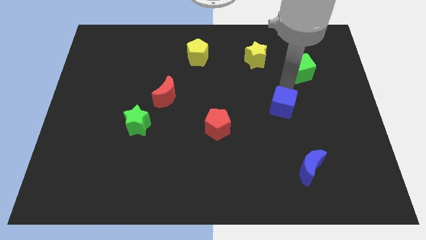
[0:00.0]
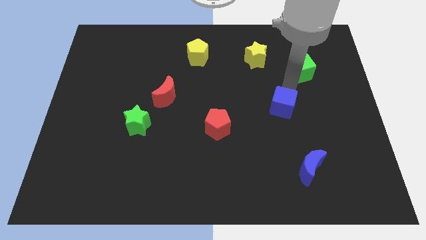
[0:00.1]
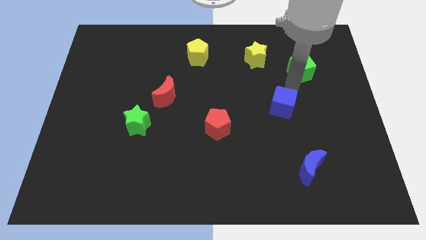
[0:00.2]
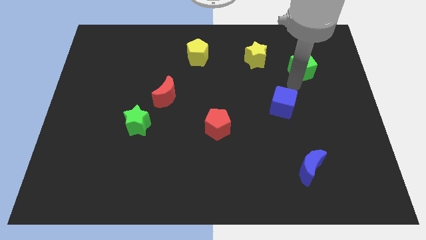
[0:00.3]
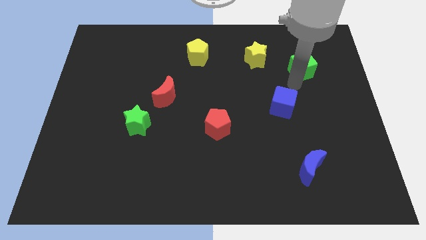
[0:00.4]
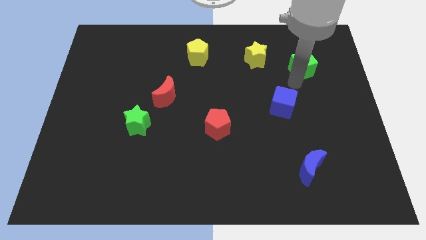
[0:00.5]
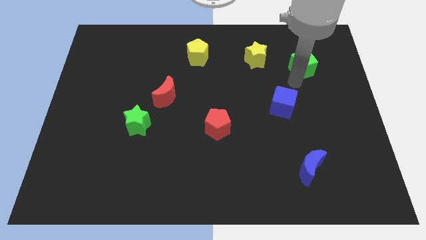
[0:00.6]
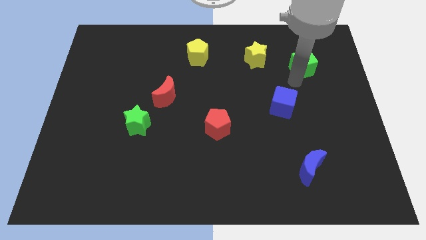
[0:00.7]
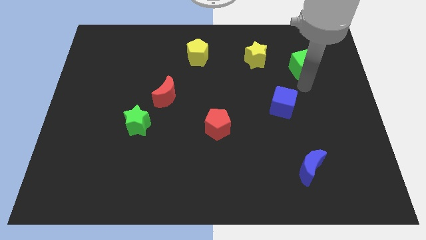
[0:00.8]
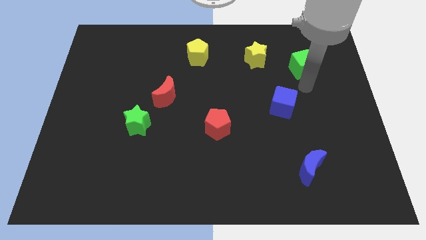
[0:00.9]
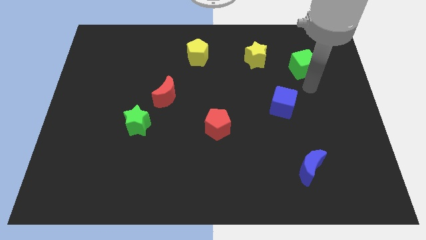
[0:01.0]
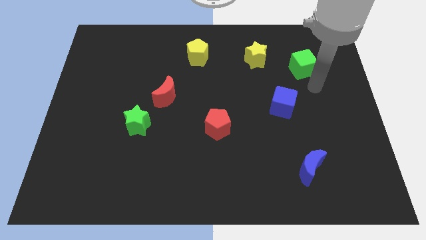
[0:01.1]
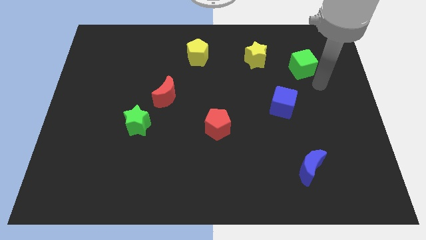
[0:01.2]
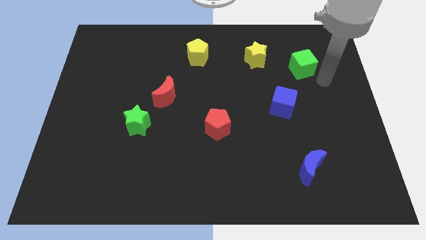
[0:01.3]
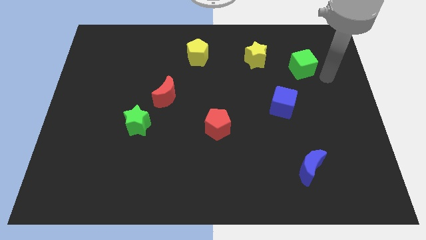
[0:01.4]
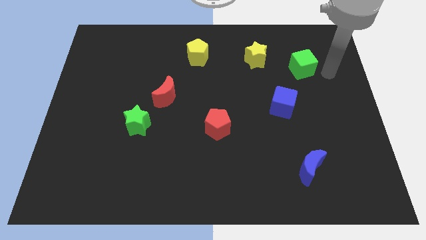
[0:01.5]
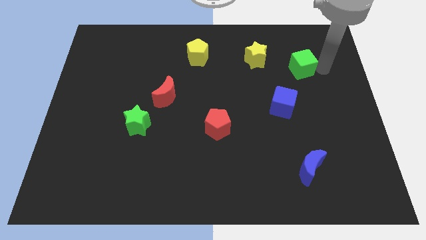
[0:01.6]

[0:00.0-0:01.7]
slightly move green cube upwards

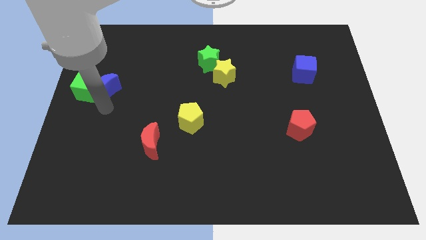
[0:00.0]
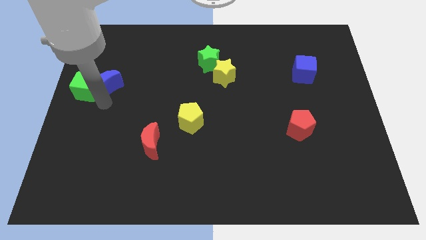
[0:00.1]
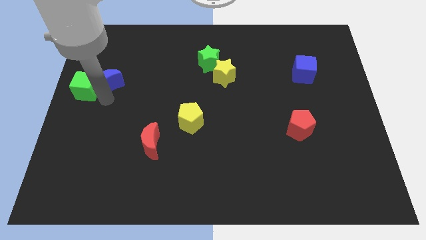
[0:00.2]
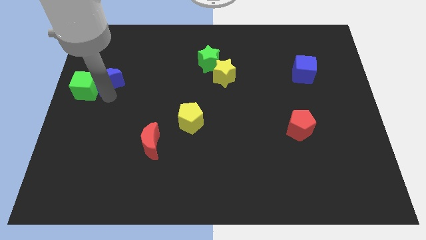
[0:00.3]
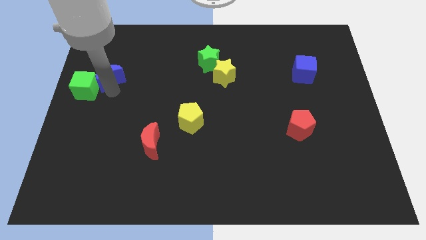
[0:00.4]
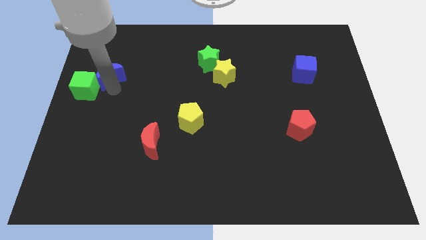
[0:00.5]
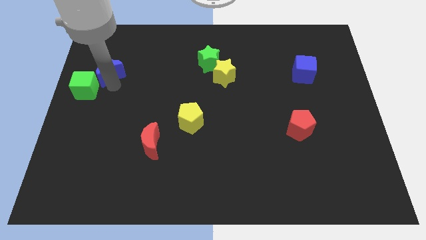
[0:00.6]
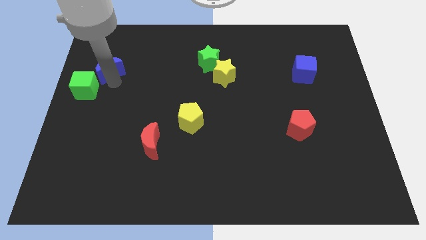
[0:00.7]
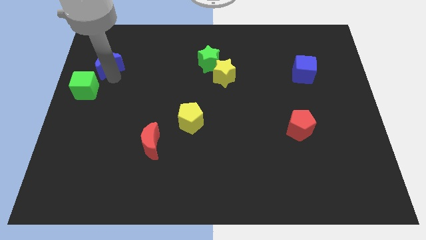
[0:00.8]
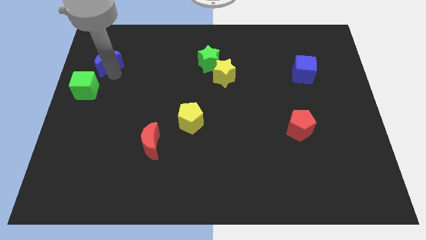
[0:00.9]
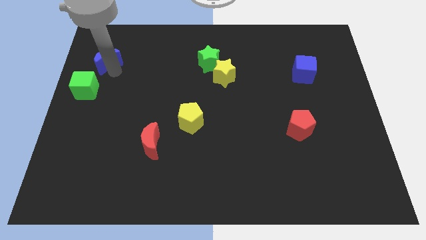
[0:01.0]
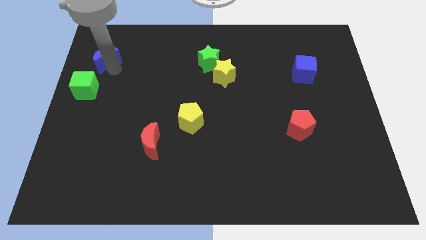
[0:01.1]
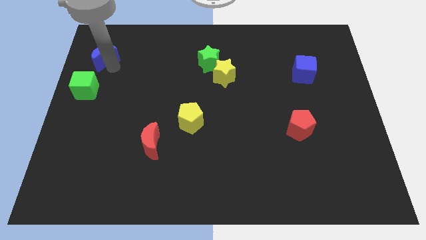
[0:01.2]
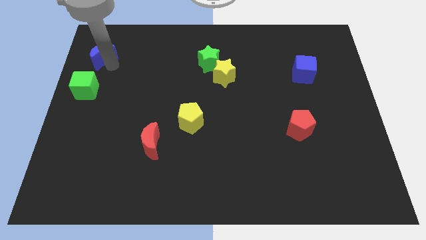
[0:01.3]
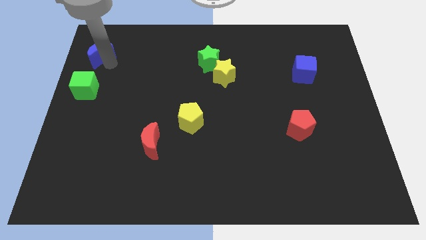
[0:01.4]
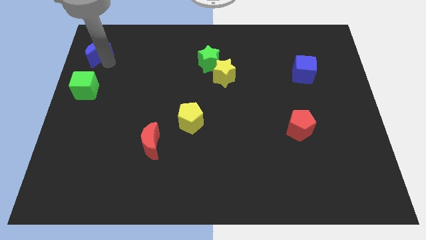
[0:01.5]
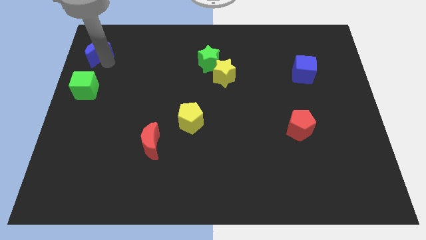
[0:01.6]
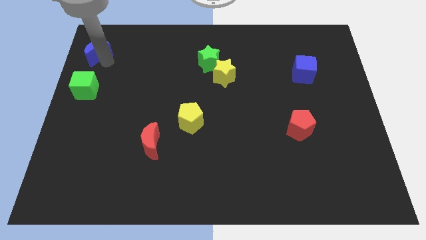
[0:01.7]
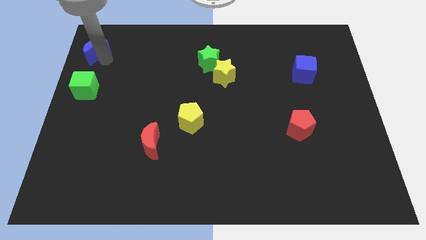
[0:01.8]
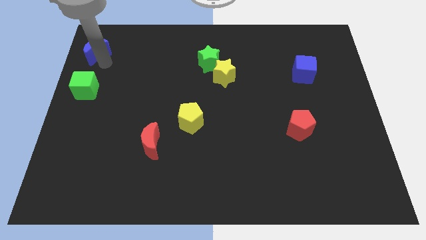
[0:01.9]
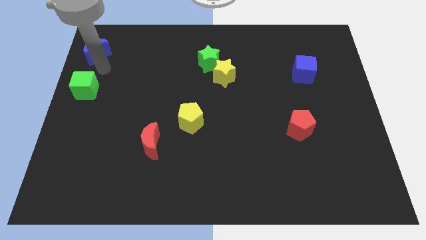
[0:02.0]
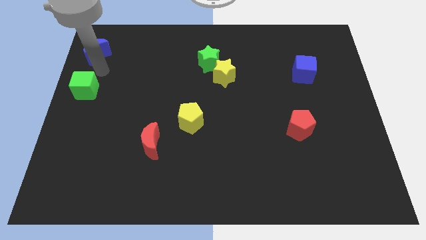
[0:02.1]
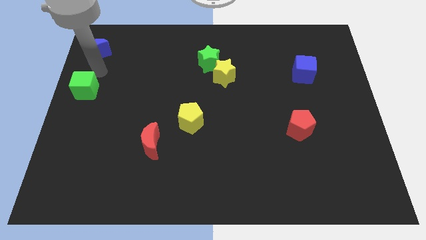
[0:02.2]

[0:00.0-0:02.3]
place the blue crescent vertically above the green cube

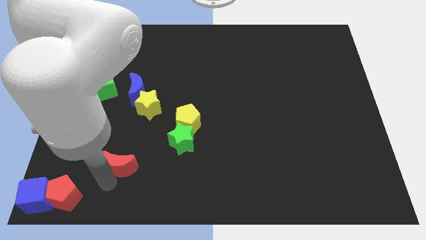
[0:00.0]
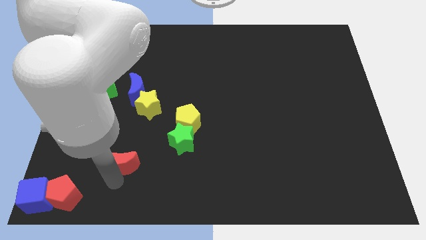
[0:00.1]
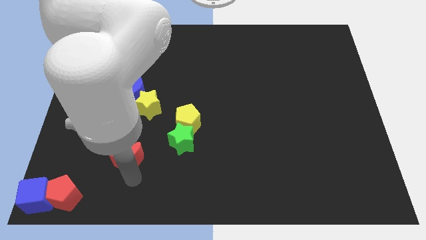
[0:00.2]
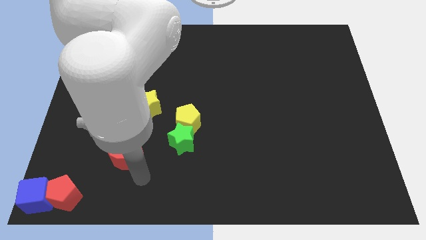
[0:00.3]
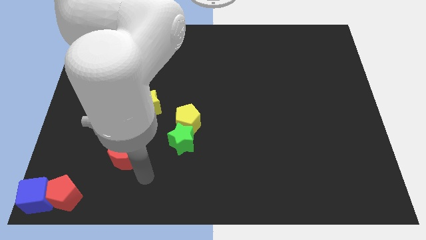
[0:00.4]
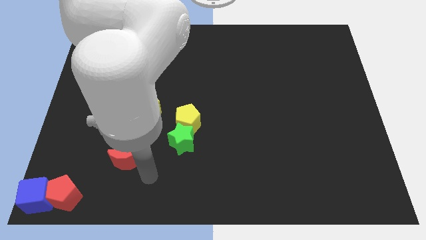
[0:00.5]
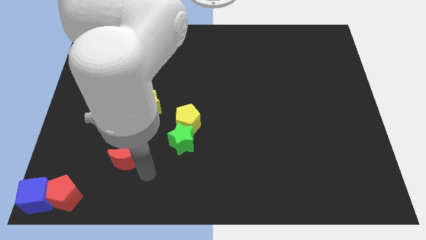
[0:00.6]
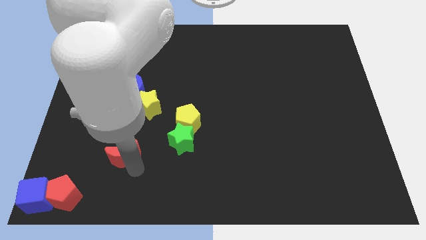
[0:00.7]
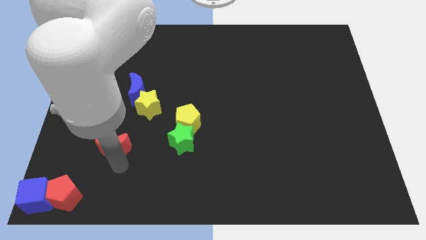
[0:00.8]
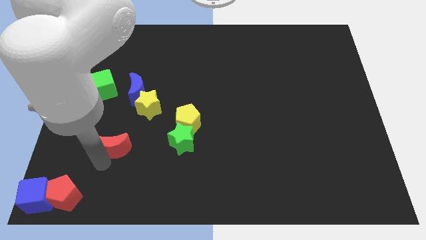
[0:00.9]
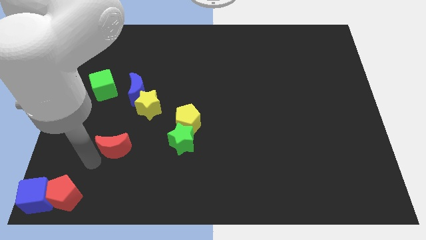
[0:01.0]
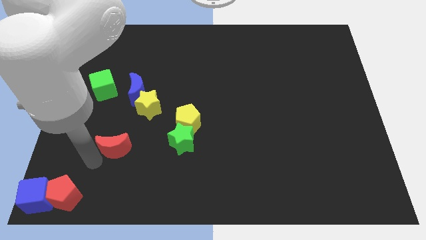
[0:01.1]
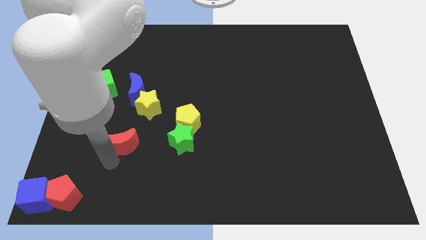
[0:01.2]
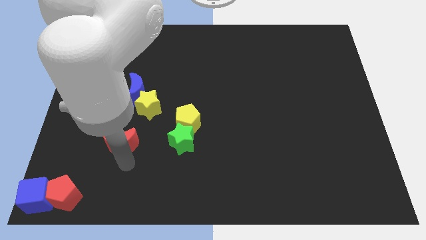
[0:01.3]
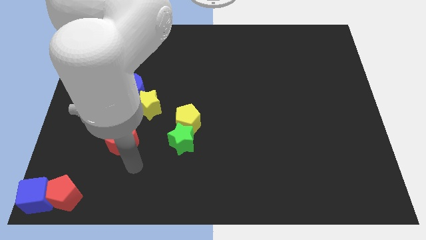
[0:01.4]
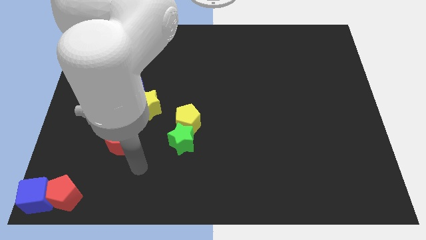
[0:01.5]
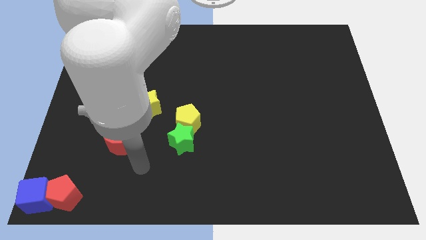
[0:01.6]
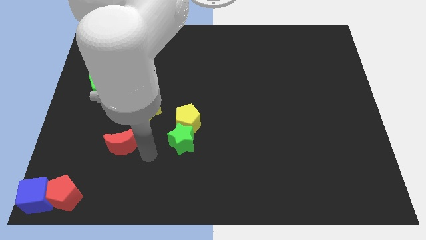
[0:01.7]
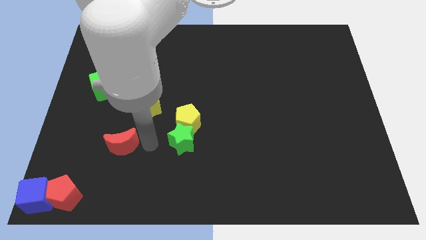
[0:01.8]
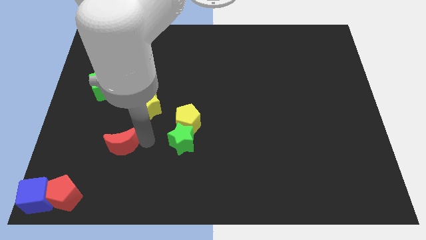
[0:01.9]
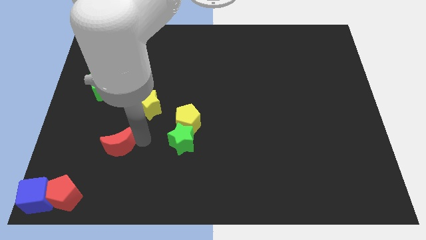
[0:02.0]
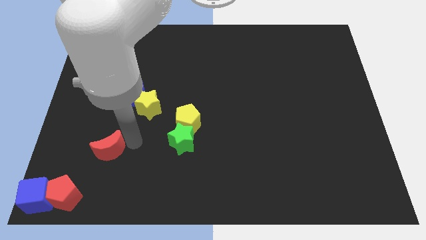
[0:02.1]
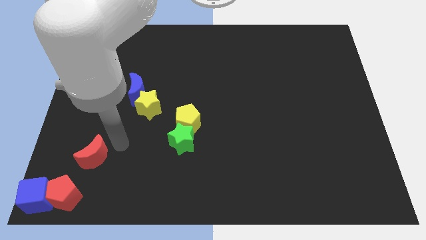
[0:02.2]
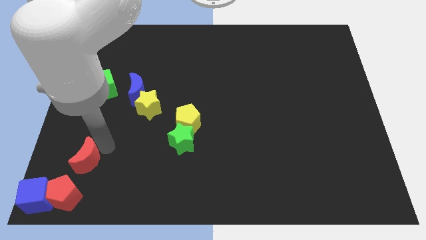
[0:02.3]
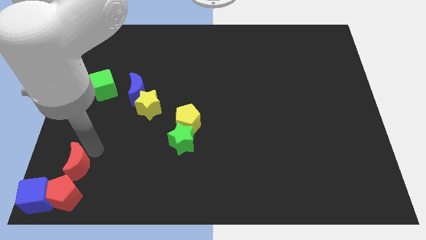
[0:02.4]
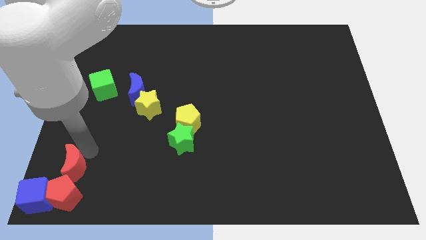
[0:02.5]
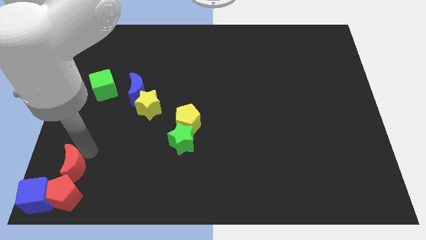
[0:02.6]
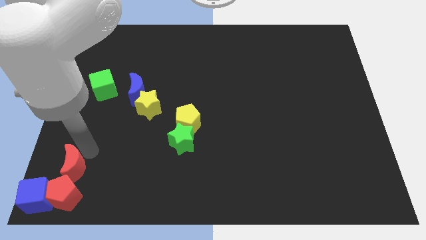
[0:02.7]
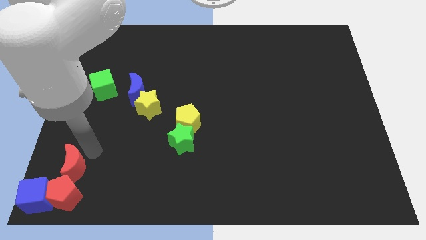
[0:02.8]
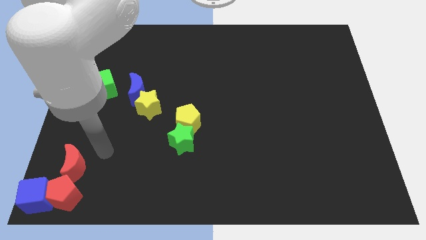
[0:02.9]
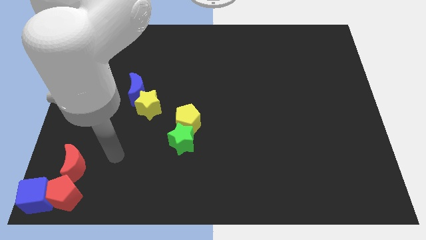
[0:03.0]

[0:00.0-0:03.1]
put red moon above red pentagon

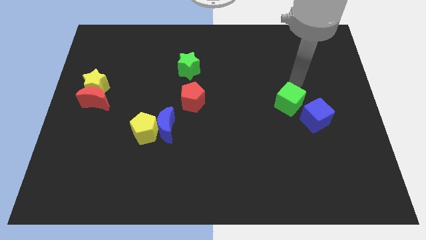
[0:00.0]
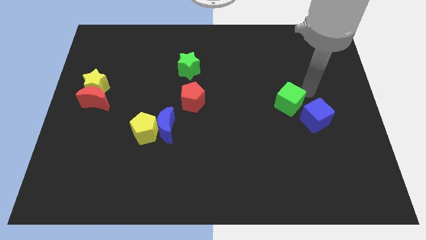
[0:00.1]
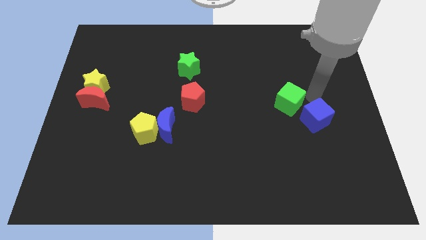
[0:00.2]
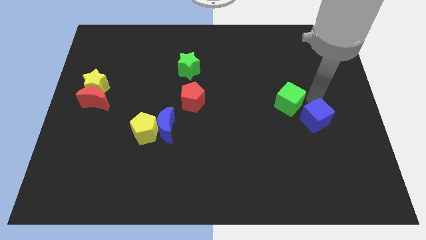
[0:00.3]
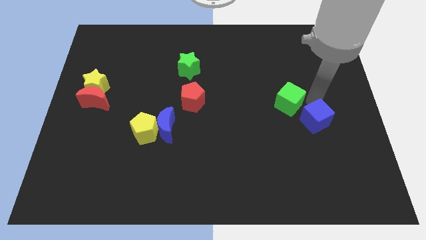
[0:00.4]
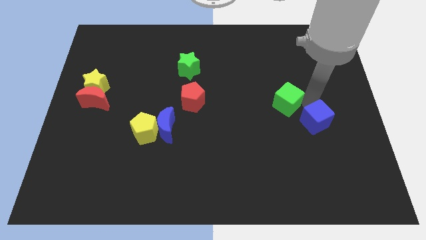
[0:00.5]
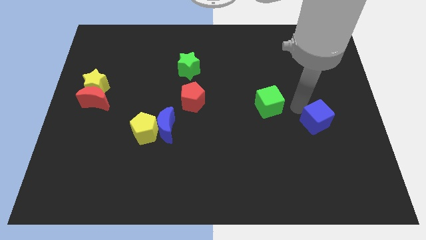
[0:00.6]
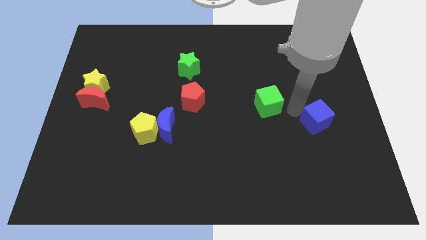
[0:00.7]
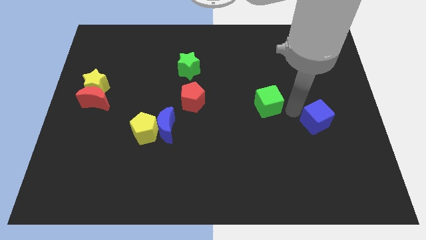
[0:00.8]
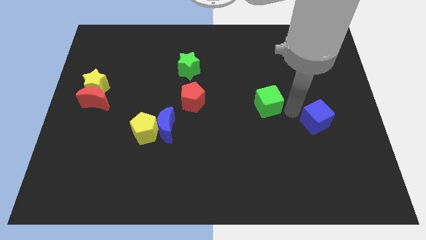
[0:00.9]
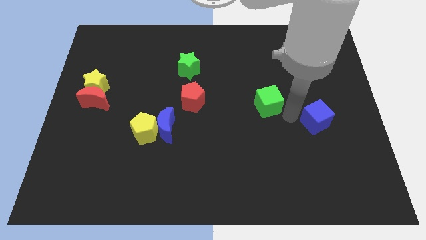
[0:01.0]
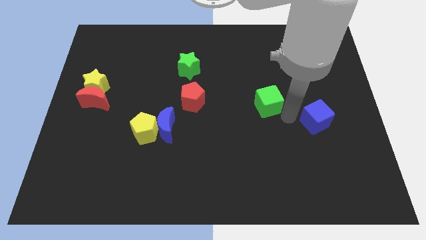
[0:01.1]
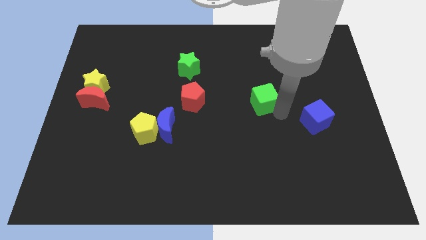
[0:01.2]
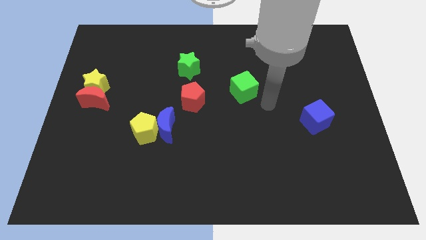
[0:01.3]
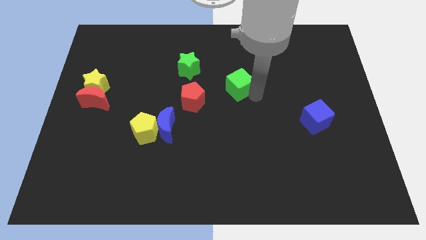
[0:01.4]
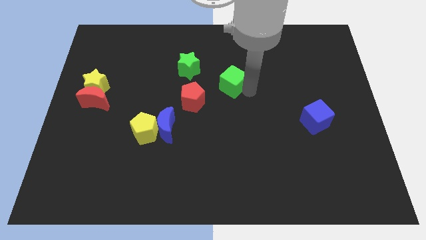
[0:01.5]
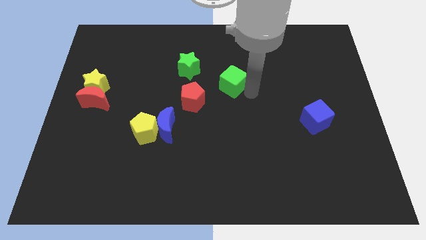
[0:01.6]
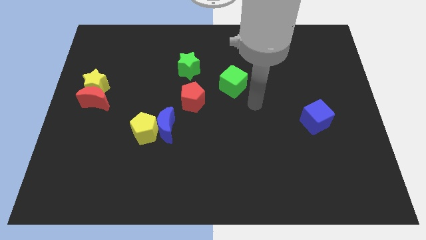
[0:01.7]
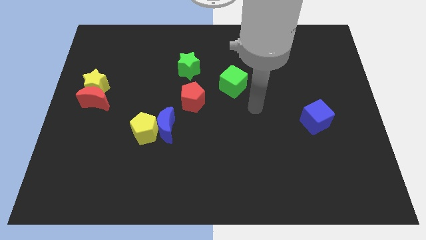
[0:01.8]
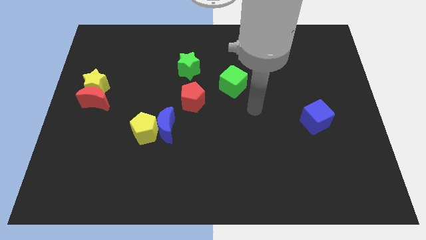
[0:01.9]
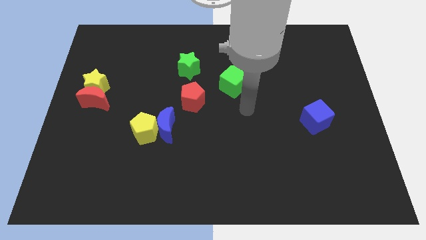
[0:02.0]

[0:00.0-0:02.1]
separate the green cube from the blue cube
